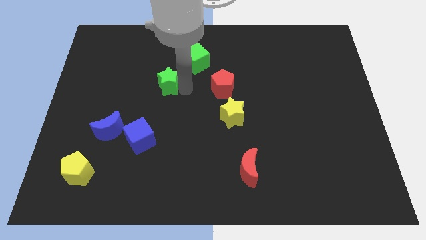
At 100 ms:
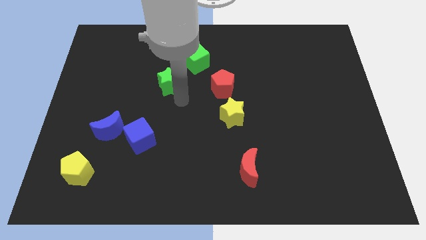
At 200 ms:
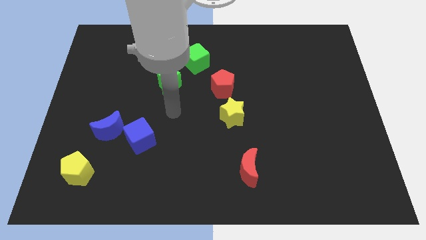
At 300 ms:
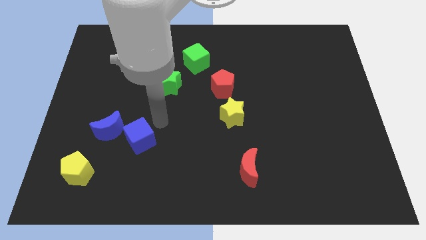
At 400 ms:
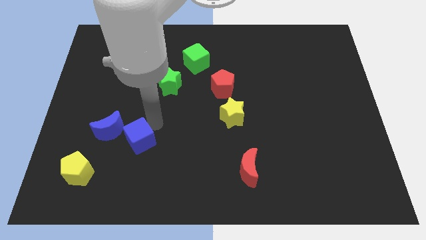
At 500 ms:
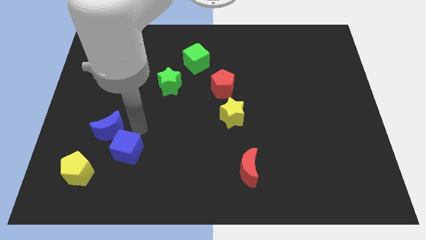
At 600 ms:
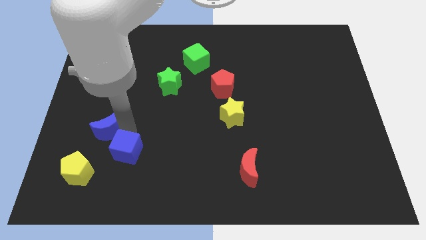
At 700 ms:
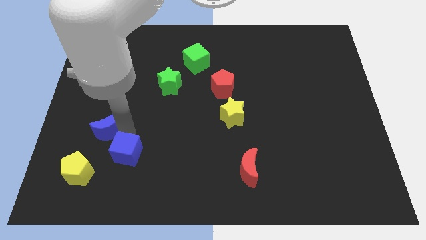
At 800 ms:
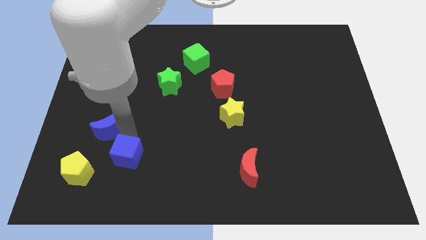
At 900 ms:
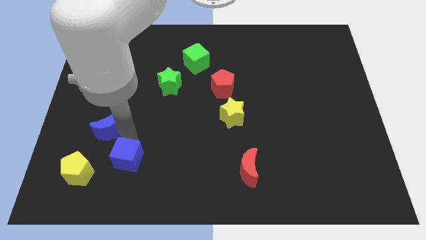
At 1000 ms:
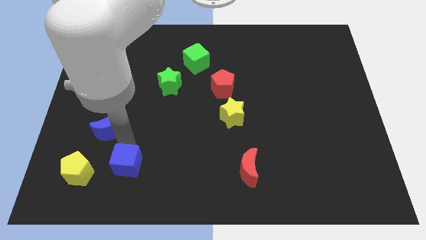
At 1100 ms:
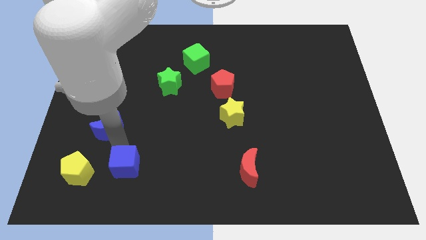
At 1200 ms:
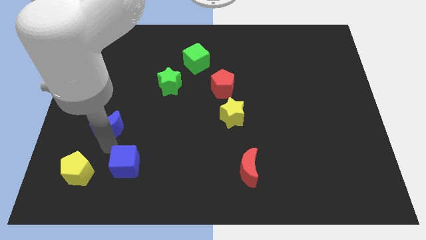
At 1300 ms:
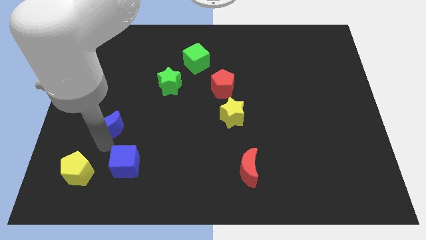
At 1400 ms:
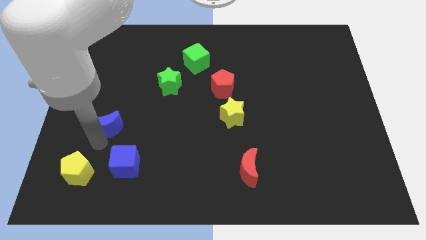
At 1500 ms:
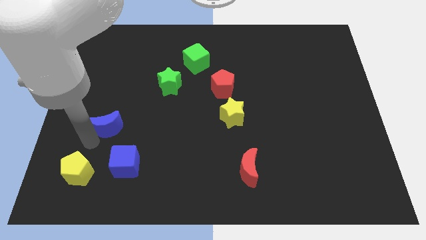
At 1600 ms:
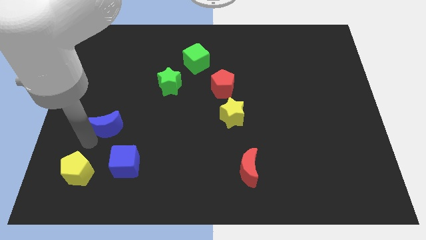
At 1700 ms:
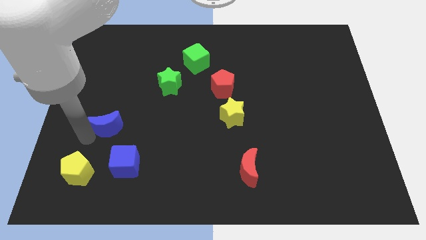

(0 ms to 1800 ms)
place blue cube to the right of the yellow pentagon

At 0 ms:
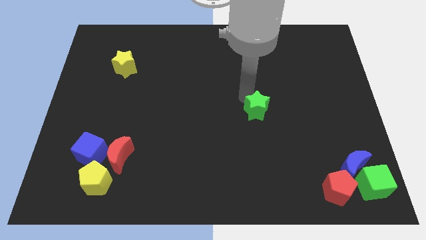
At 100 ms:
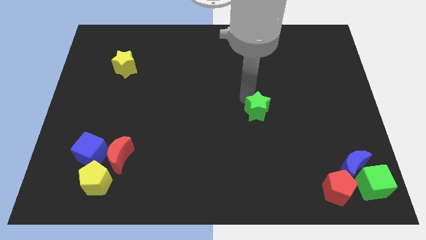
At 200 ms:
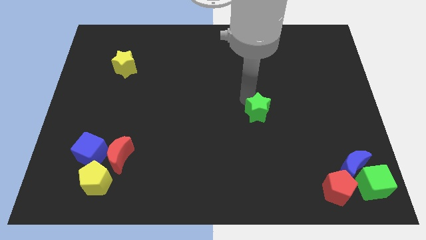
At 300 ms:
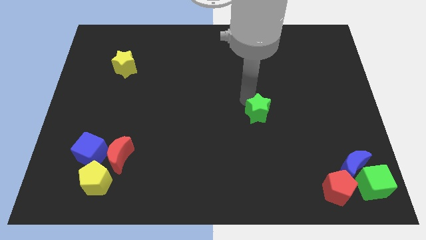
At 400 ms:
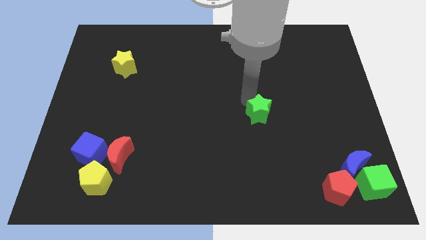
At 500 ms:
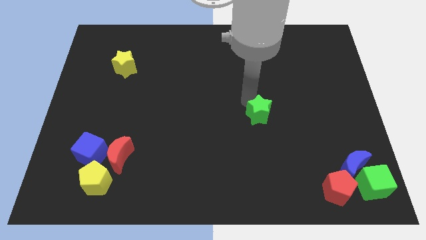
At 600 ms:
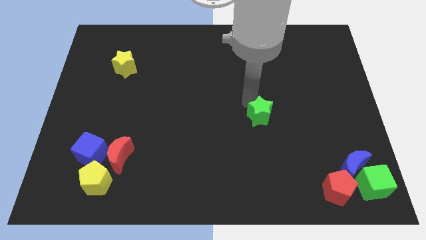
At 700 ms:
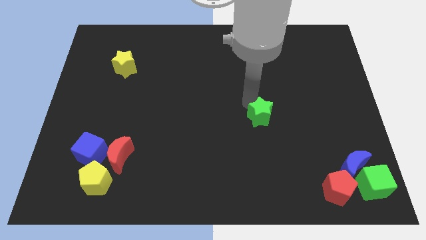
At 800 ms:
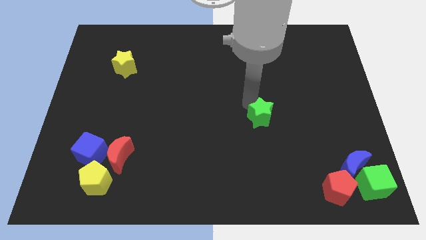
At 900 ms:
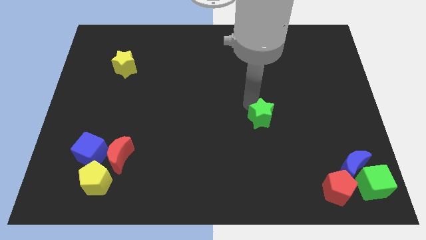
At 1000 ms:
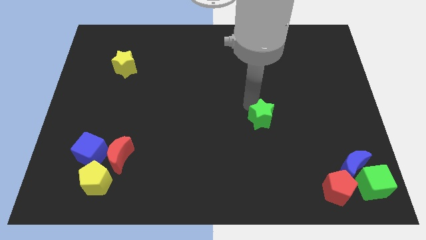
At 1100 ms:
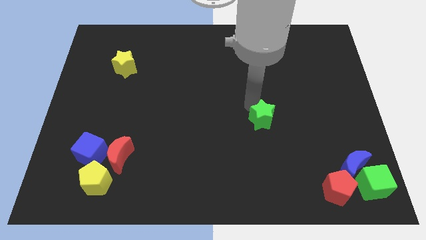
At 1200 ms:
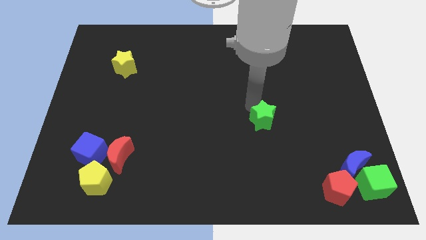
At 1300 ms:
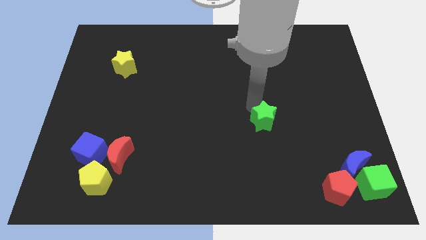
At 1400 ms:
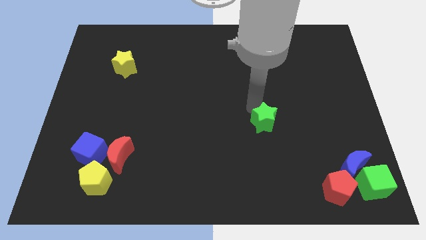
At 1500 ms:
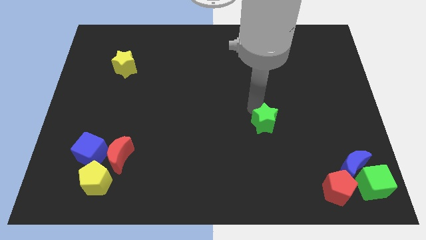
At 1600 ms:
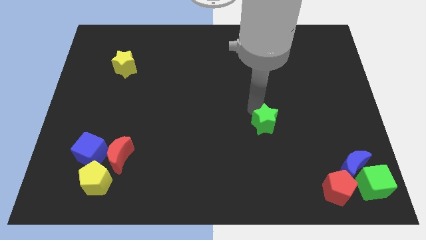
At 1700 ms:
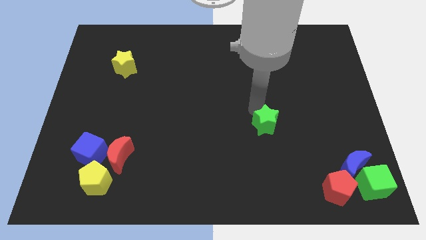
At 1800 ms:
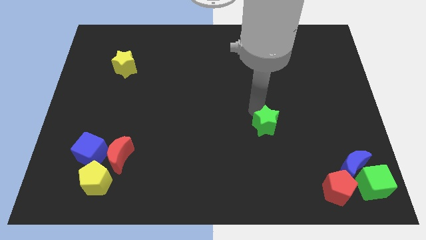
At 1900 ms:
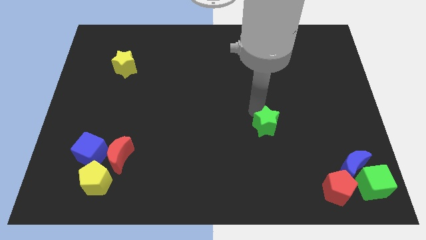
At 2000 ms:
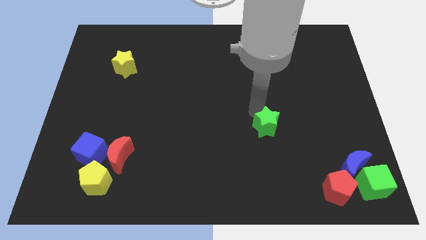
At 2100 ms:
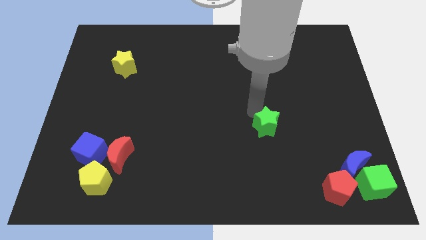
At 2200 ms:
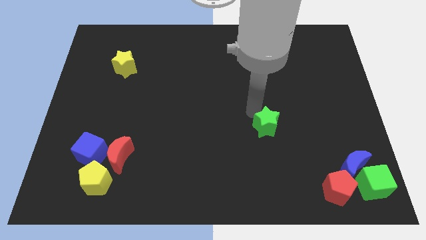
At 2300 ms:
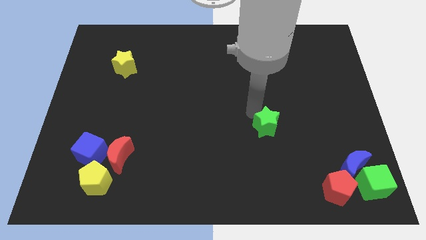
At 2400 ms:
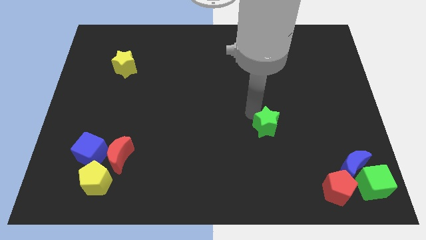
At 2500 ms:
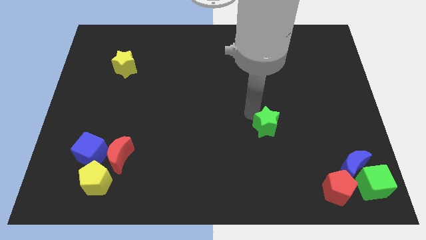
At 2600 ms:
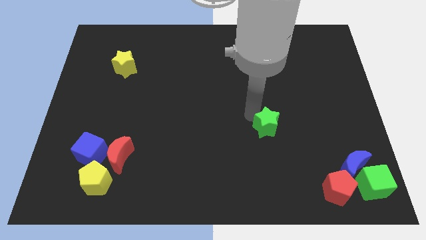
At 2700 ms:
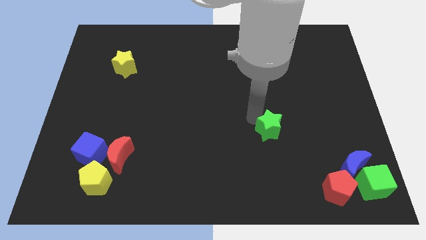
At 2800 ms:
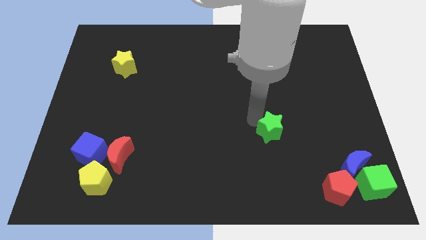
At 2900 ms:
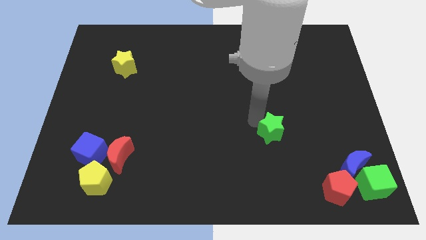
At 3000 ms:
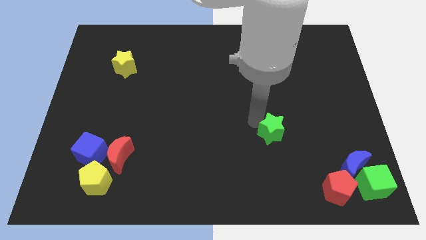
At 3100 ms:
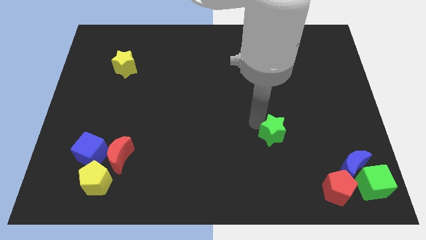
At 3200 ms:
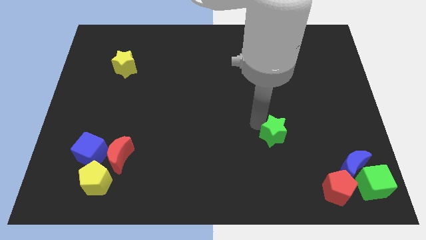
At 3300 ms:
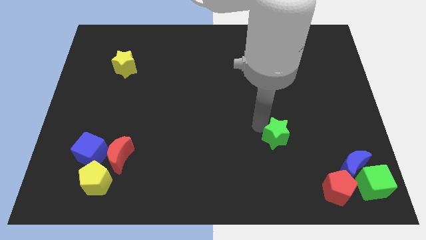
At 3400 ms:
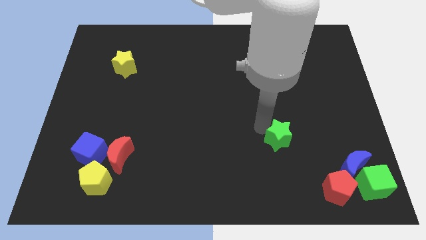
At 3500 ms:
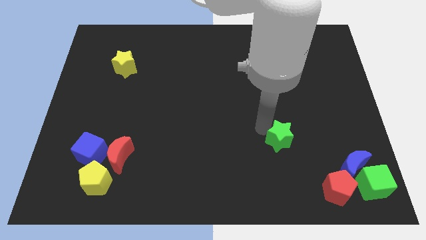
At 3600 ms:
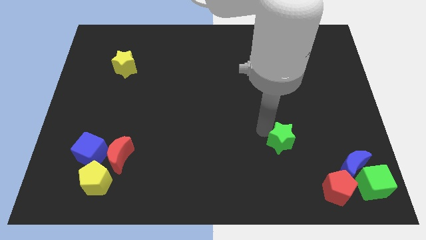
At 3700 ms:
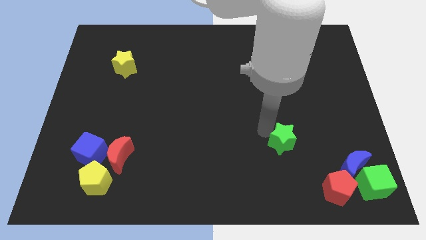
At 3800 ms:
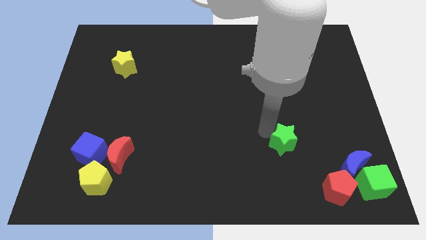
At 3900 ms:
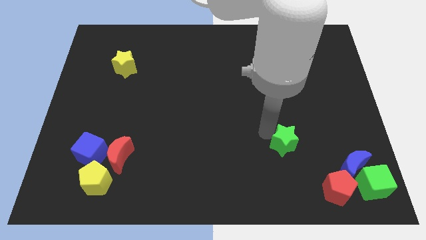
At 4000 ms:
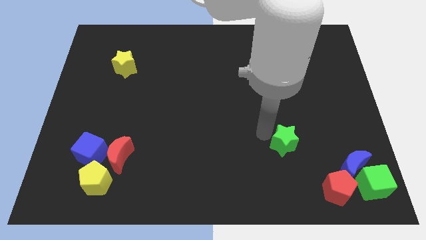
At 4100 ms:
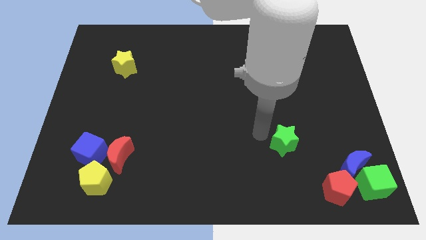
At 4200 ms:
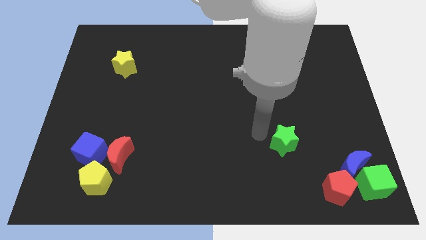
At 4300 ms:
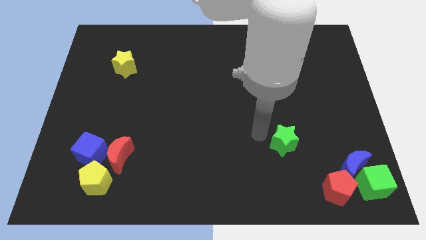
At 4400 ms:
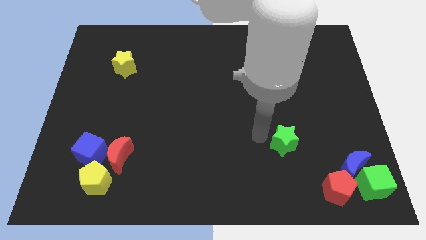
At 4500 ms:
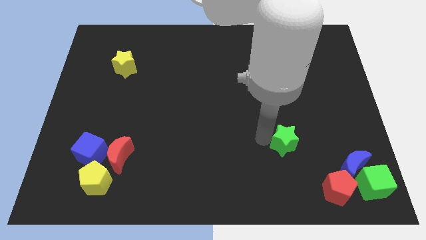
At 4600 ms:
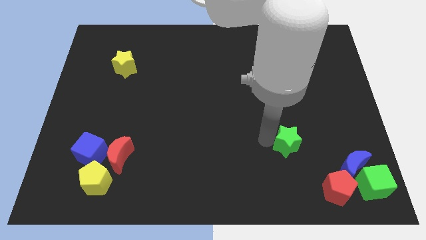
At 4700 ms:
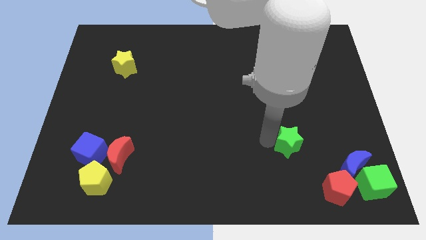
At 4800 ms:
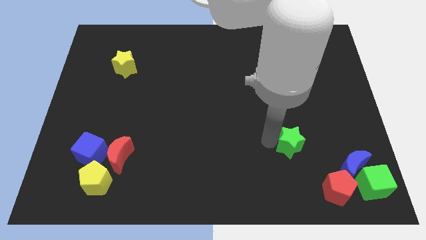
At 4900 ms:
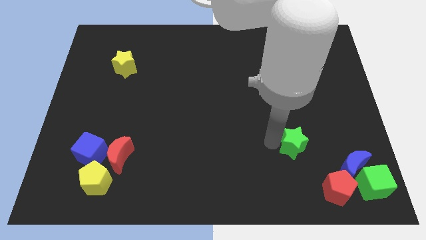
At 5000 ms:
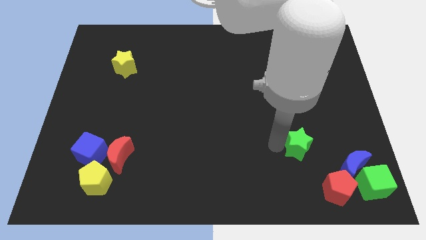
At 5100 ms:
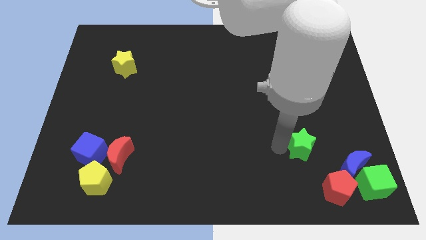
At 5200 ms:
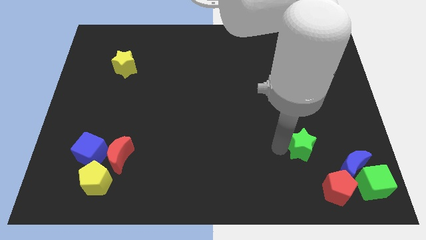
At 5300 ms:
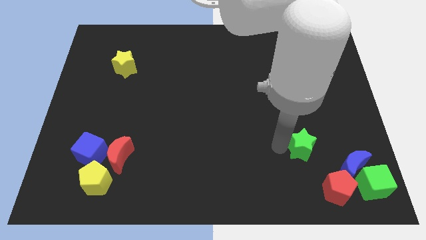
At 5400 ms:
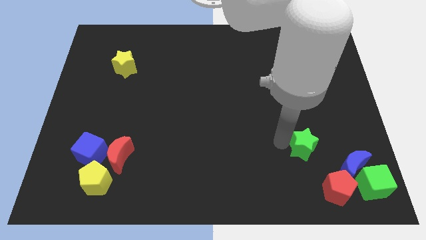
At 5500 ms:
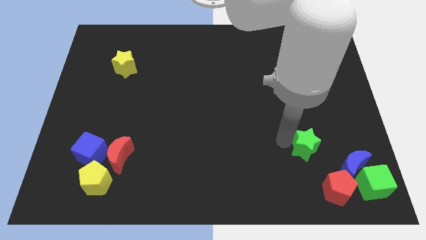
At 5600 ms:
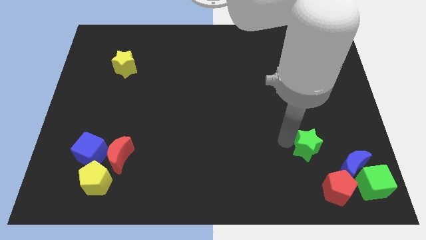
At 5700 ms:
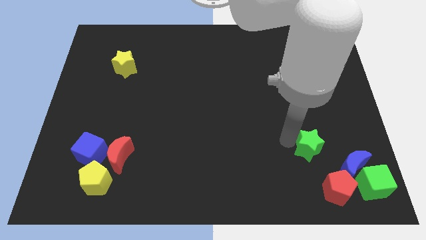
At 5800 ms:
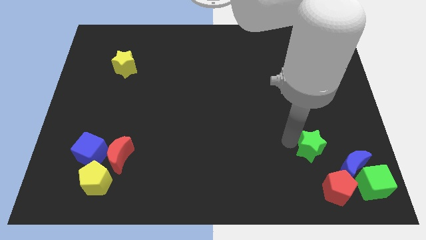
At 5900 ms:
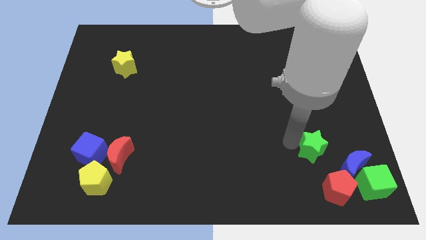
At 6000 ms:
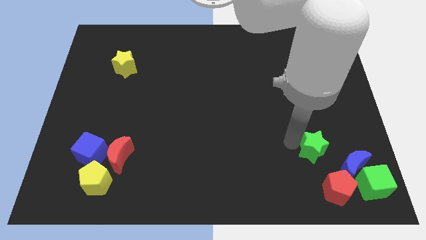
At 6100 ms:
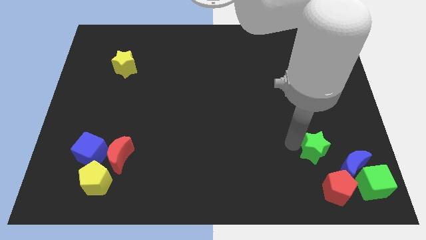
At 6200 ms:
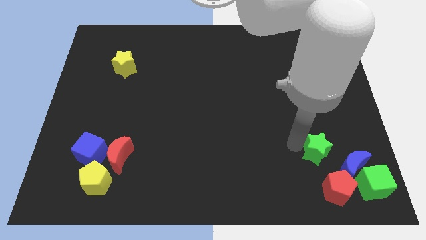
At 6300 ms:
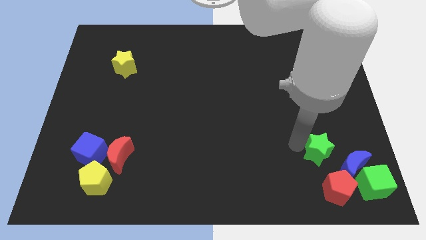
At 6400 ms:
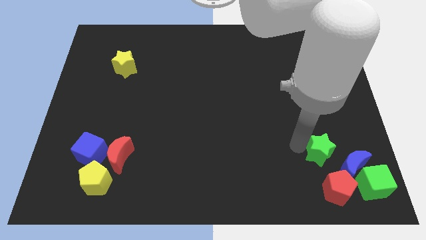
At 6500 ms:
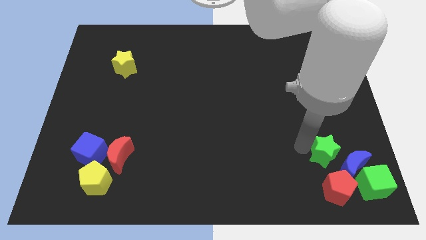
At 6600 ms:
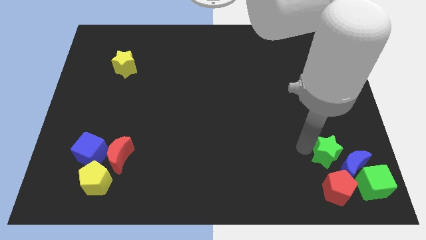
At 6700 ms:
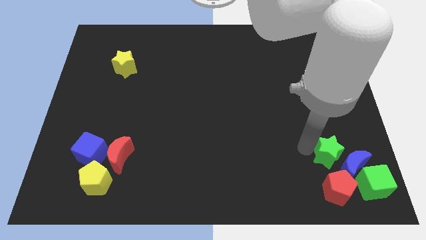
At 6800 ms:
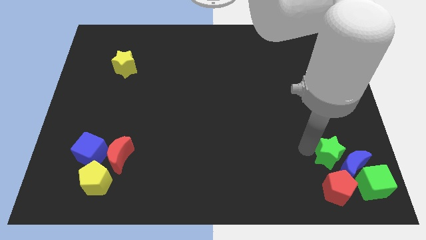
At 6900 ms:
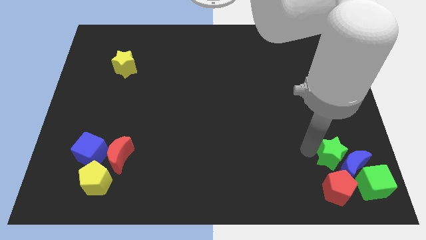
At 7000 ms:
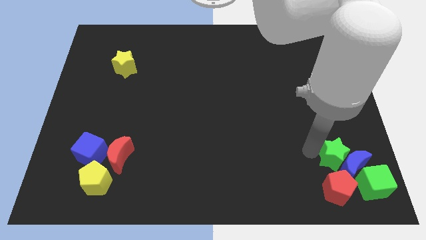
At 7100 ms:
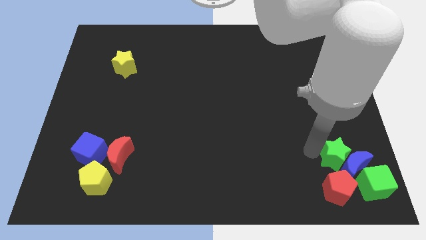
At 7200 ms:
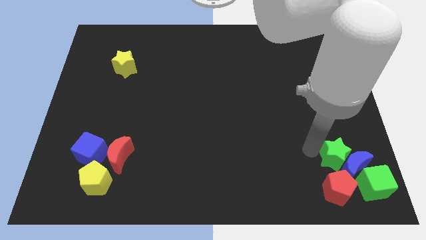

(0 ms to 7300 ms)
push the green star to the group of blocks
